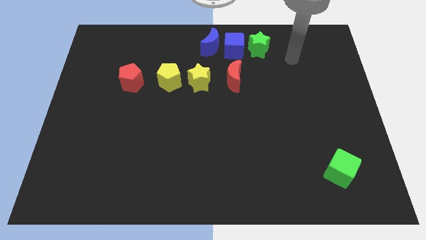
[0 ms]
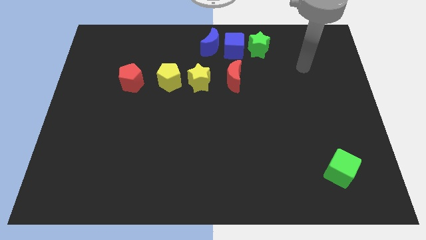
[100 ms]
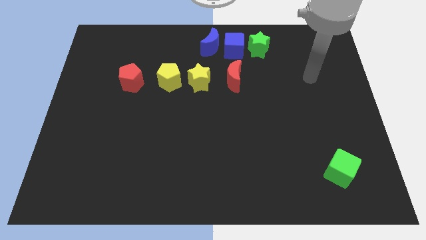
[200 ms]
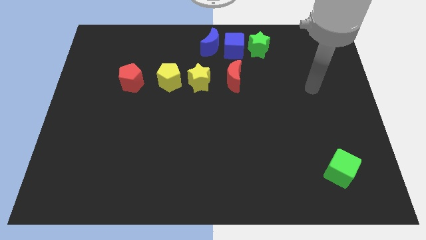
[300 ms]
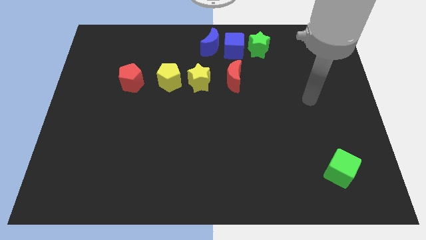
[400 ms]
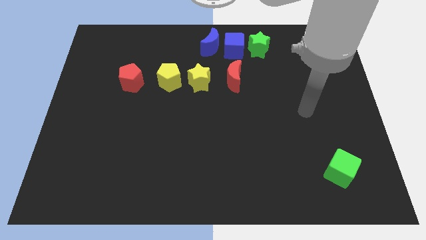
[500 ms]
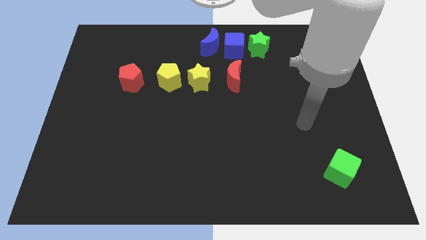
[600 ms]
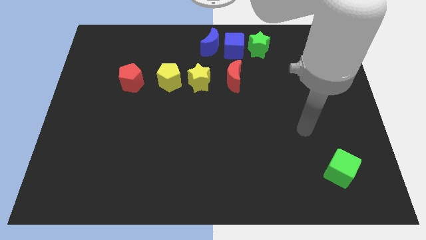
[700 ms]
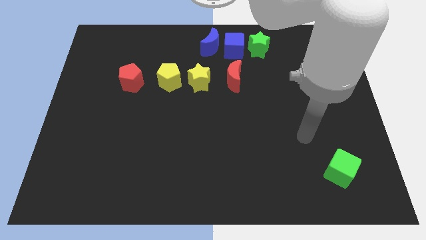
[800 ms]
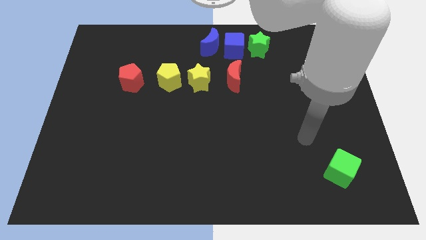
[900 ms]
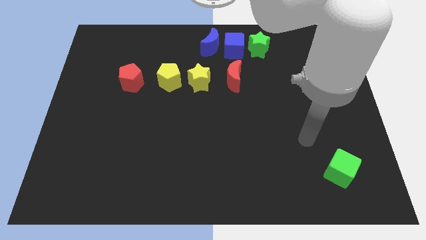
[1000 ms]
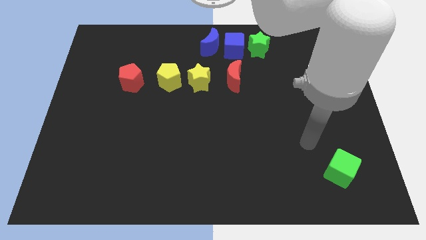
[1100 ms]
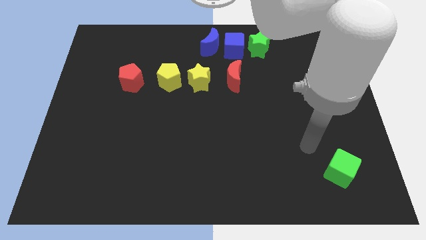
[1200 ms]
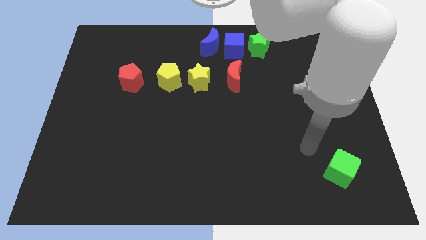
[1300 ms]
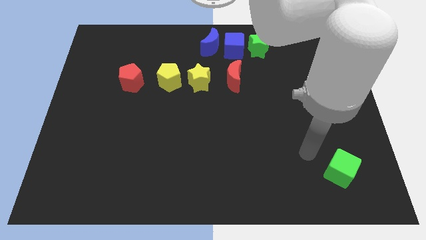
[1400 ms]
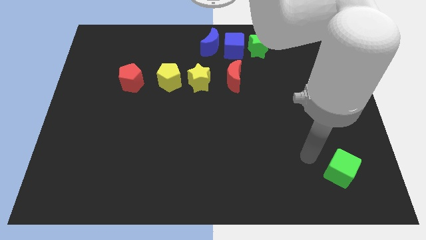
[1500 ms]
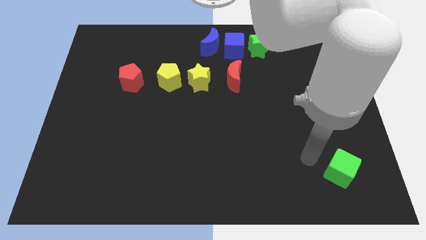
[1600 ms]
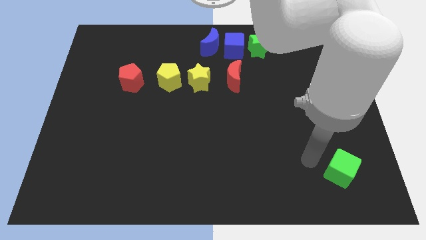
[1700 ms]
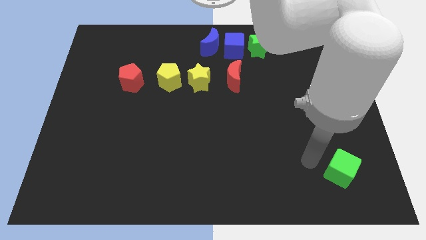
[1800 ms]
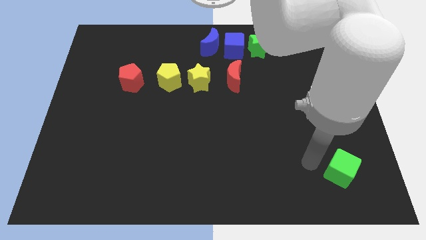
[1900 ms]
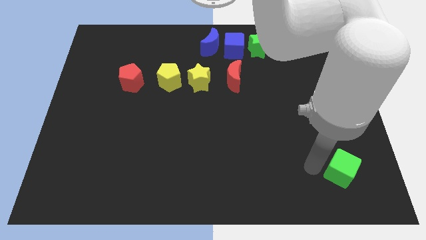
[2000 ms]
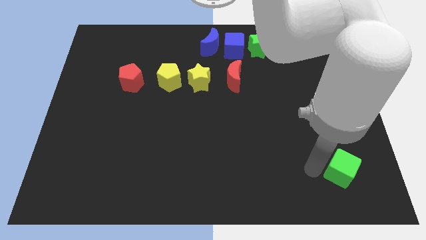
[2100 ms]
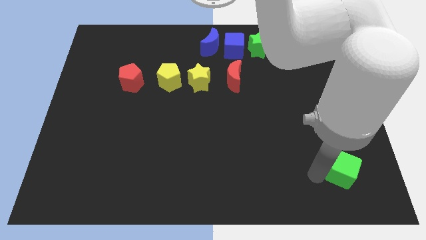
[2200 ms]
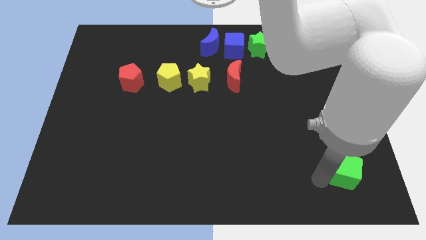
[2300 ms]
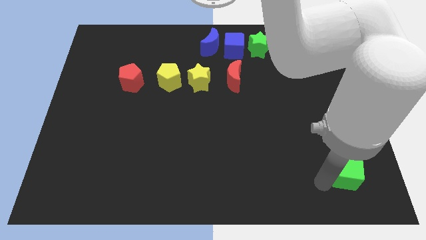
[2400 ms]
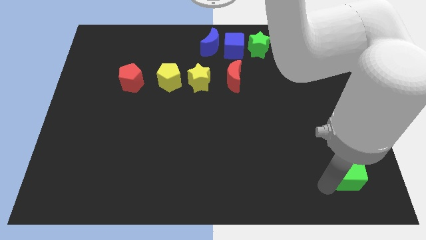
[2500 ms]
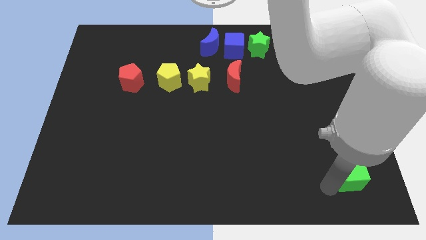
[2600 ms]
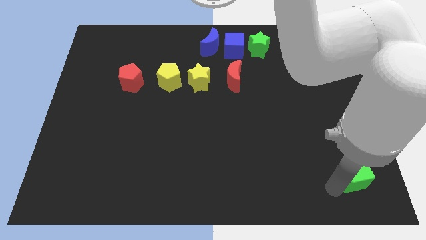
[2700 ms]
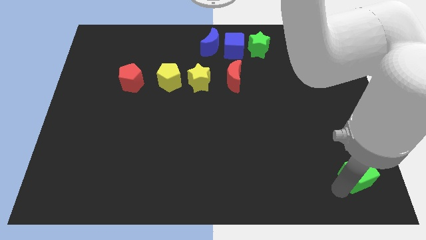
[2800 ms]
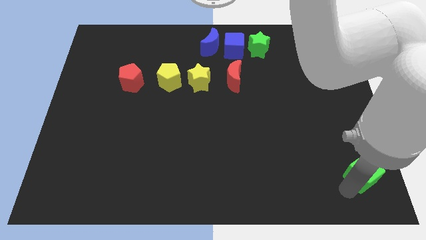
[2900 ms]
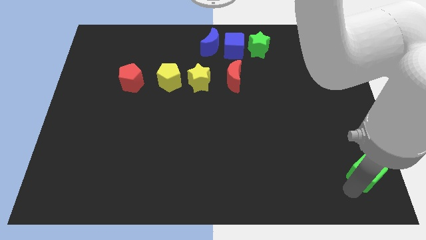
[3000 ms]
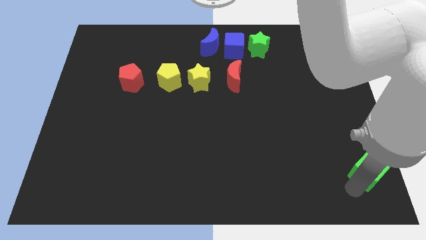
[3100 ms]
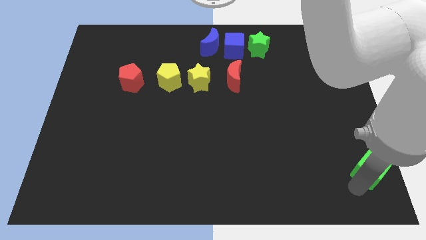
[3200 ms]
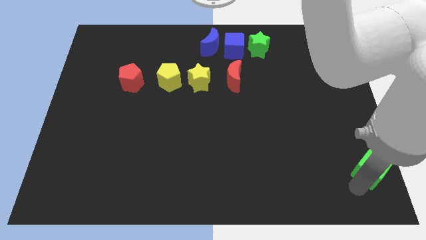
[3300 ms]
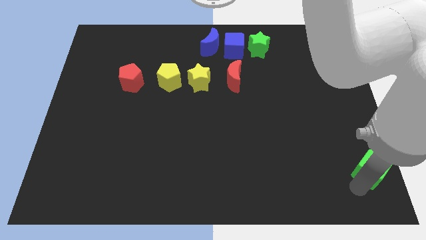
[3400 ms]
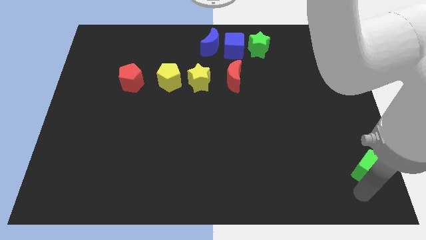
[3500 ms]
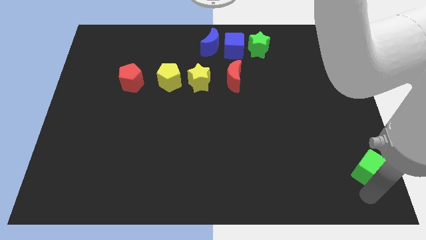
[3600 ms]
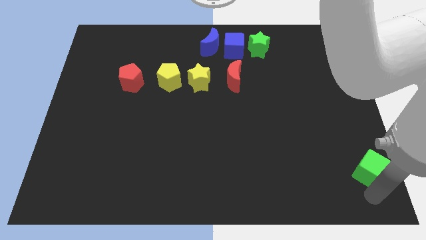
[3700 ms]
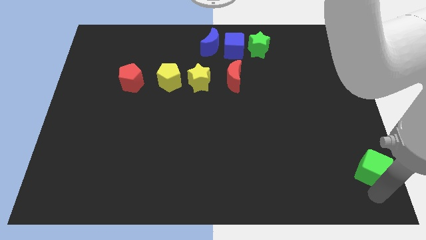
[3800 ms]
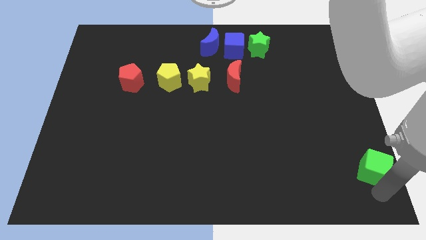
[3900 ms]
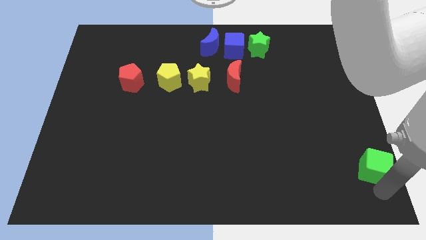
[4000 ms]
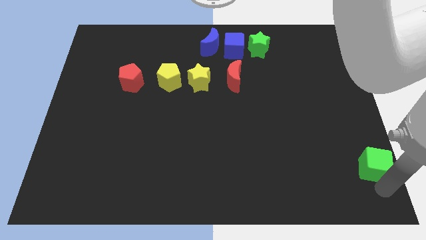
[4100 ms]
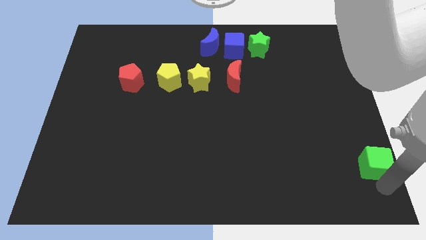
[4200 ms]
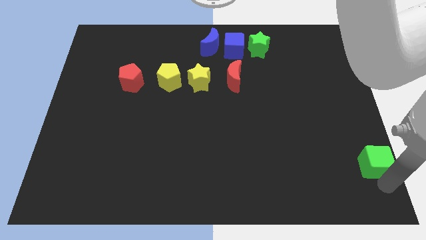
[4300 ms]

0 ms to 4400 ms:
move the green cube to the right of the board

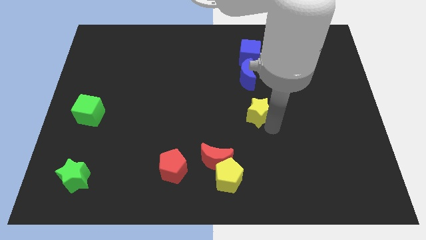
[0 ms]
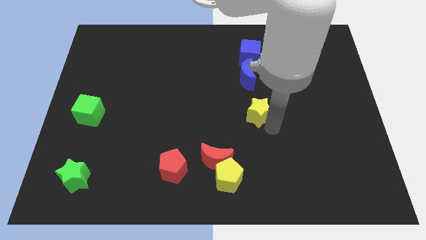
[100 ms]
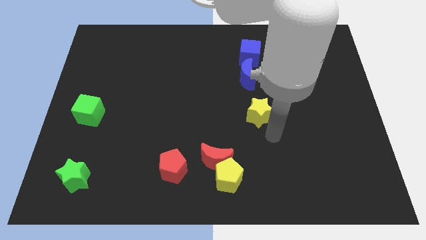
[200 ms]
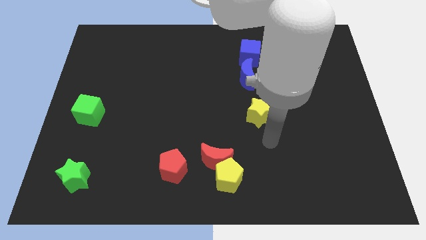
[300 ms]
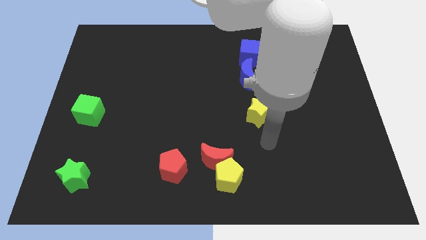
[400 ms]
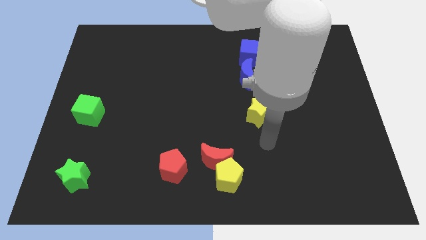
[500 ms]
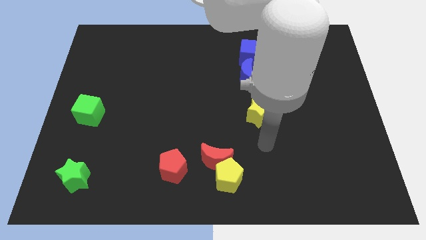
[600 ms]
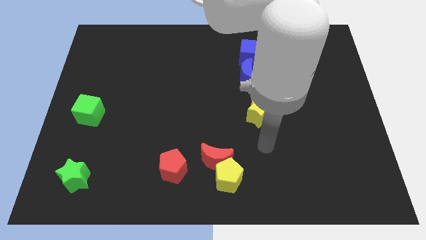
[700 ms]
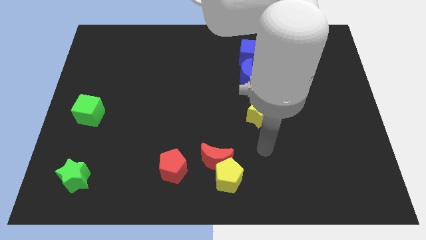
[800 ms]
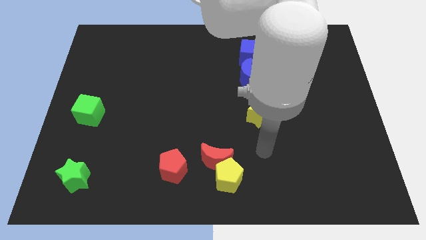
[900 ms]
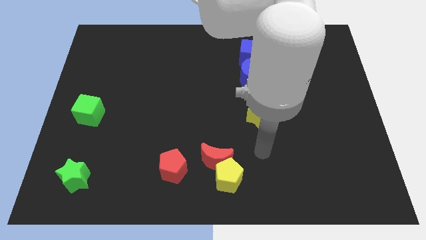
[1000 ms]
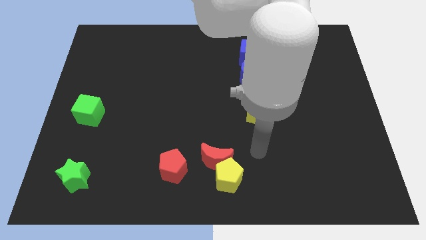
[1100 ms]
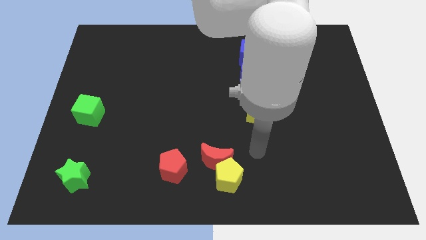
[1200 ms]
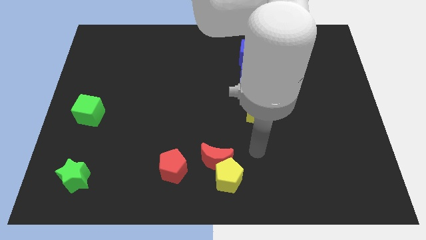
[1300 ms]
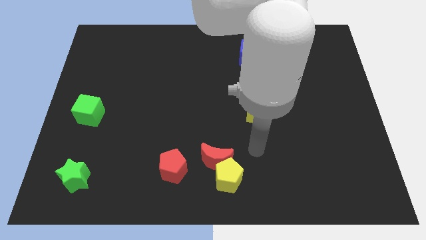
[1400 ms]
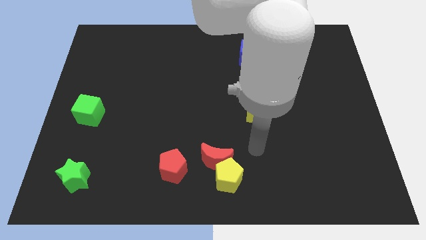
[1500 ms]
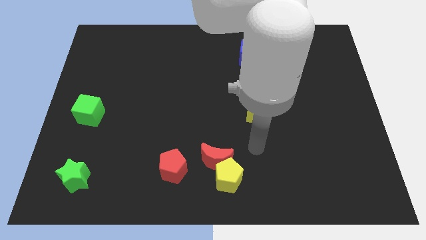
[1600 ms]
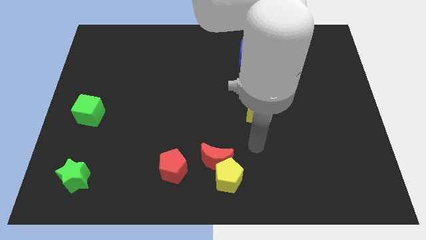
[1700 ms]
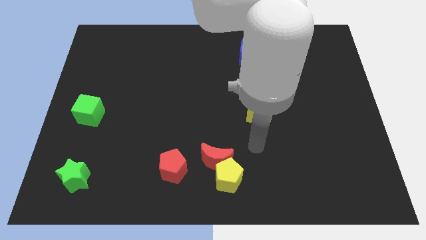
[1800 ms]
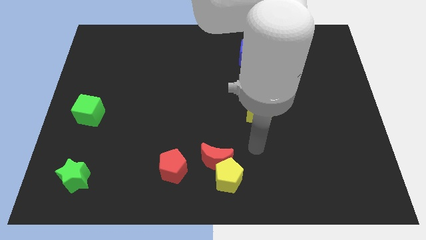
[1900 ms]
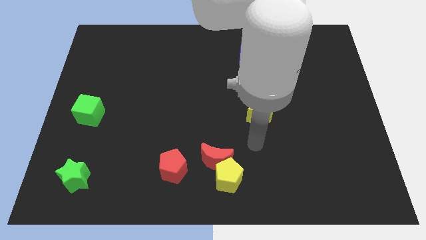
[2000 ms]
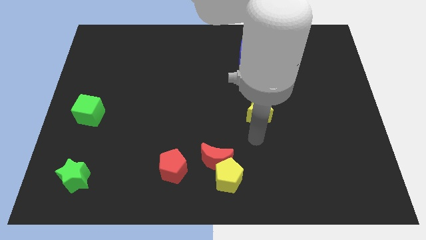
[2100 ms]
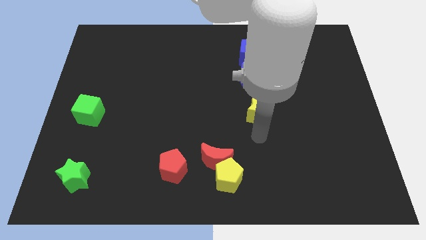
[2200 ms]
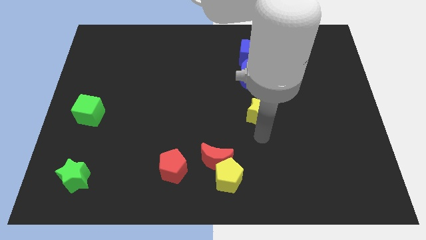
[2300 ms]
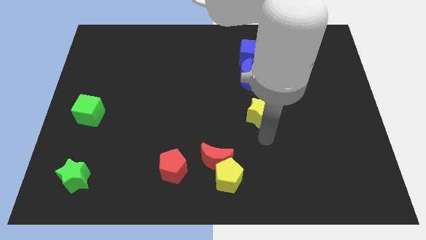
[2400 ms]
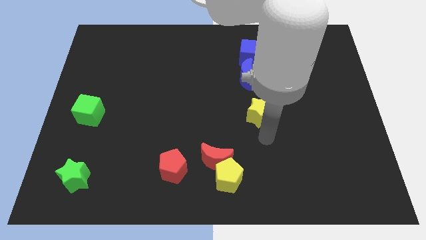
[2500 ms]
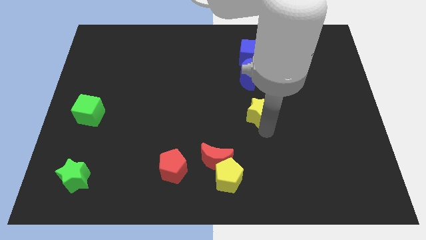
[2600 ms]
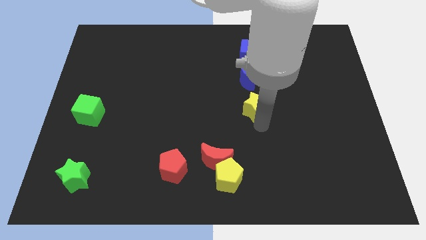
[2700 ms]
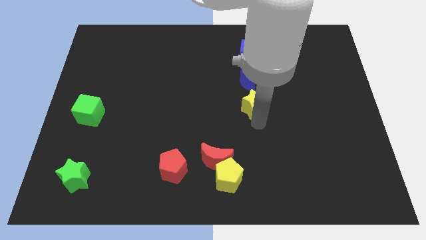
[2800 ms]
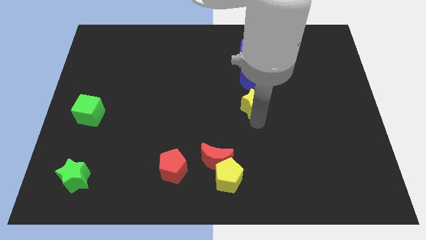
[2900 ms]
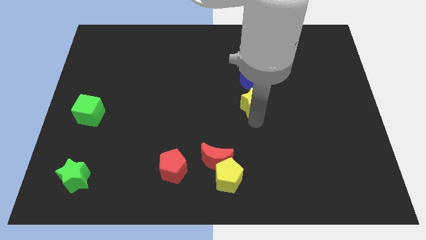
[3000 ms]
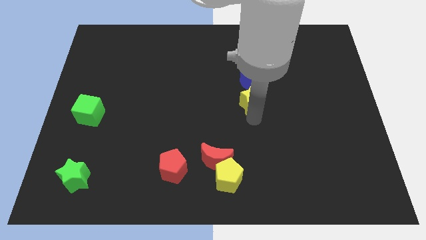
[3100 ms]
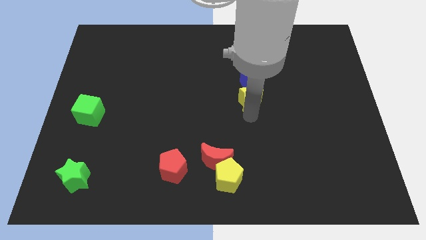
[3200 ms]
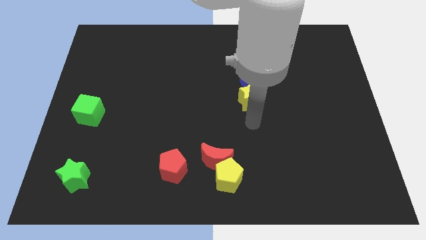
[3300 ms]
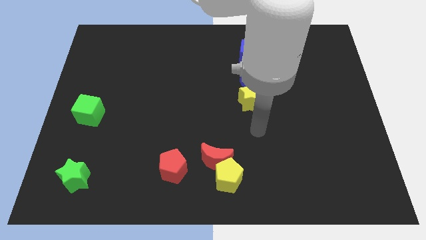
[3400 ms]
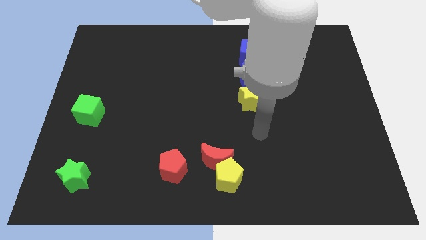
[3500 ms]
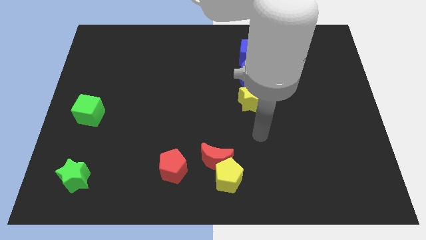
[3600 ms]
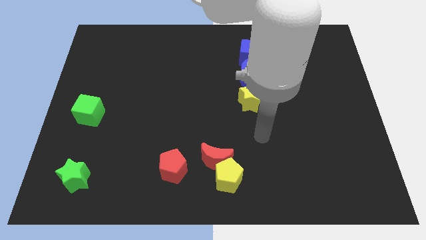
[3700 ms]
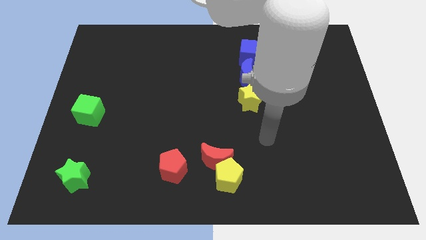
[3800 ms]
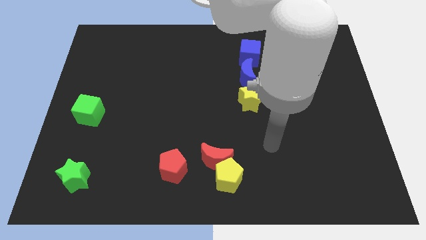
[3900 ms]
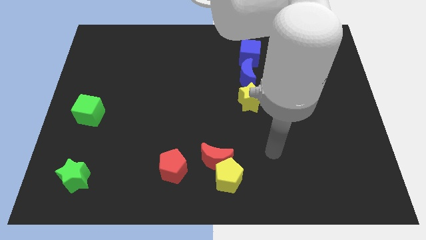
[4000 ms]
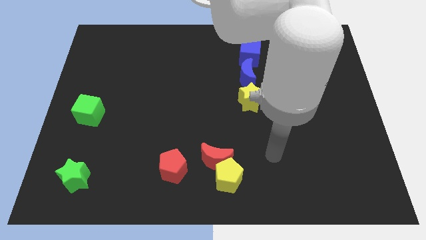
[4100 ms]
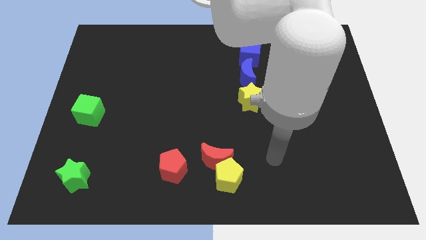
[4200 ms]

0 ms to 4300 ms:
move the yellow star vertically below the bottom side of the blue crescent

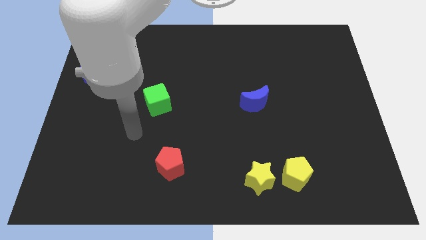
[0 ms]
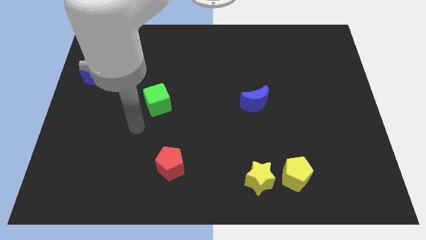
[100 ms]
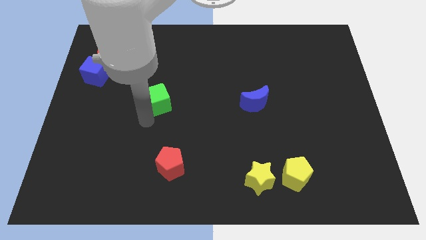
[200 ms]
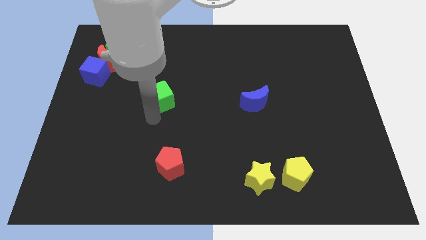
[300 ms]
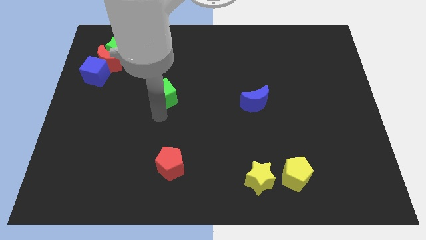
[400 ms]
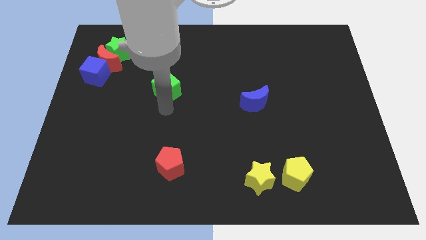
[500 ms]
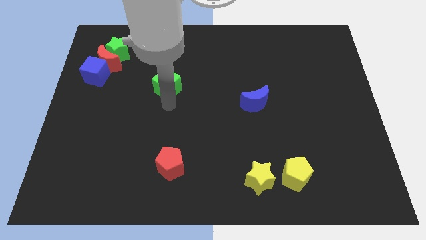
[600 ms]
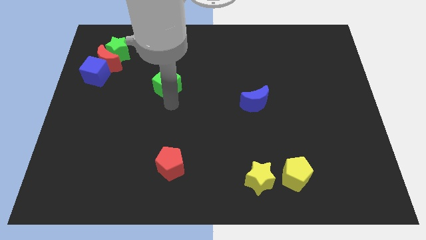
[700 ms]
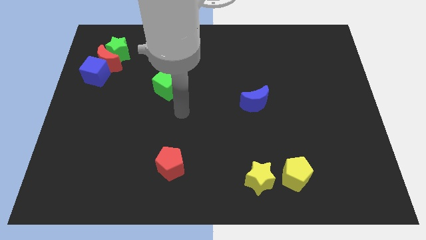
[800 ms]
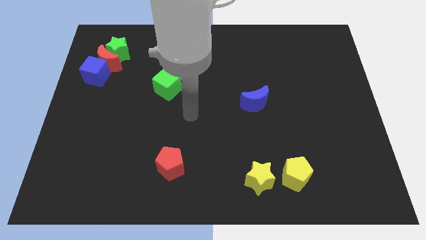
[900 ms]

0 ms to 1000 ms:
push the green cube towards the top center of the board
